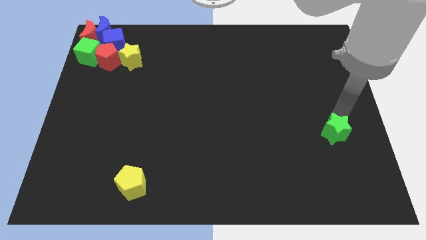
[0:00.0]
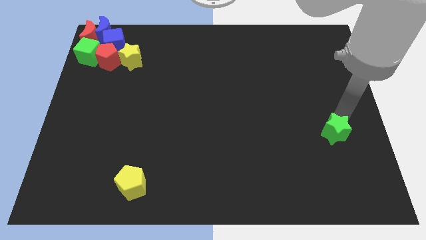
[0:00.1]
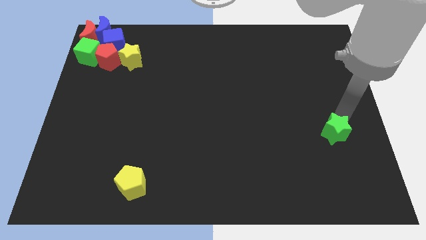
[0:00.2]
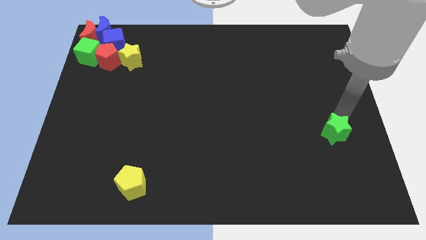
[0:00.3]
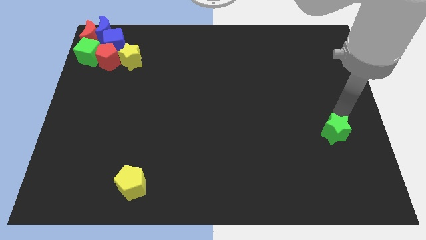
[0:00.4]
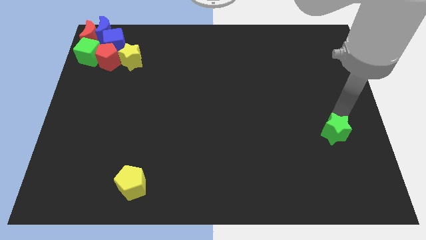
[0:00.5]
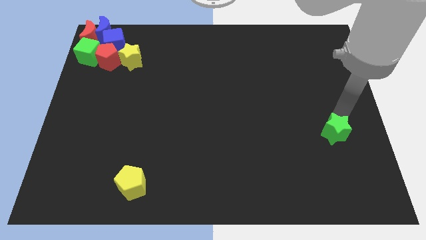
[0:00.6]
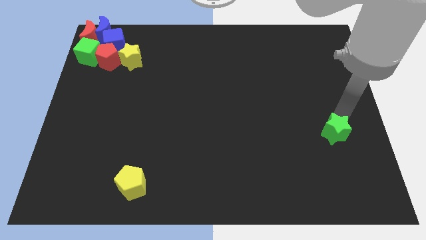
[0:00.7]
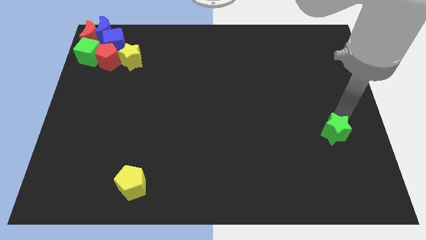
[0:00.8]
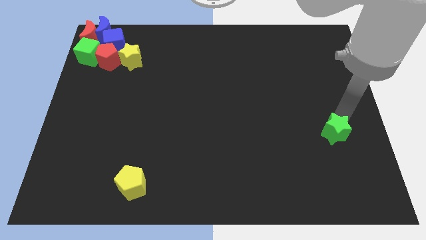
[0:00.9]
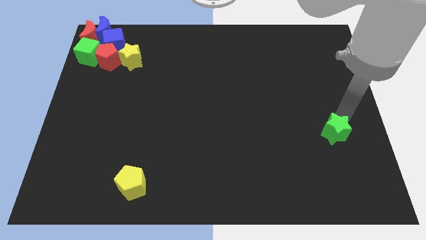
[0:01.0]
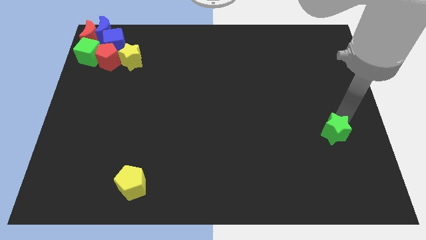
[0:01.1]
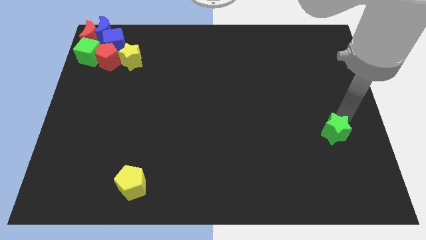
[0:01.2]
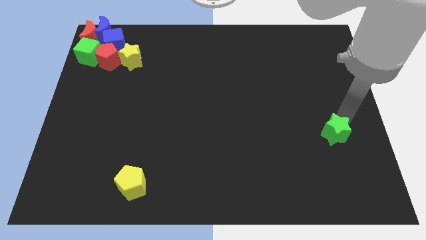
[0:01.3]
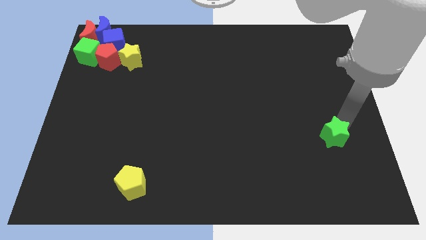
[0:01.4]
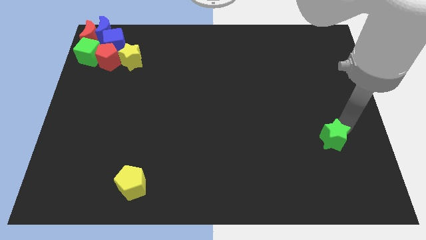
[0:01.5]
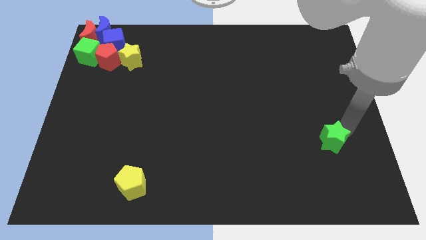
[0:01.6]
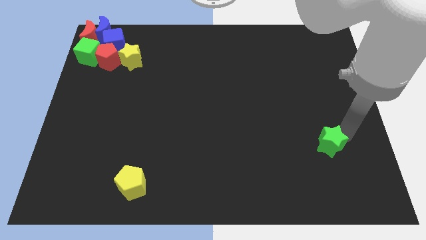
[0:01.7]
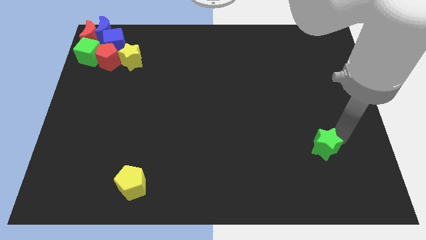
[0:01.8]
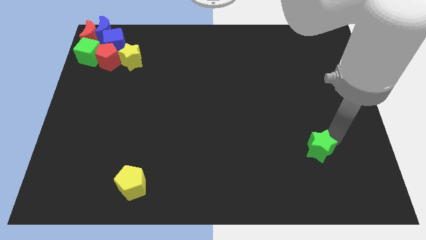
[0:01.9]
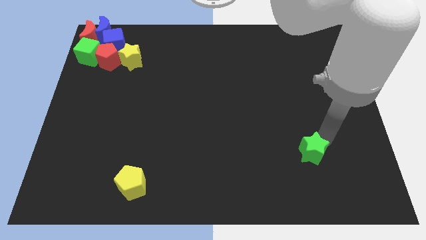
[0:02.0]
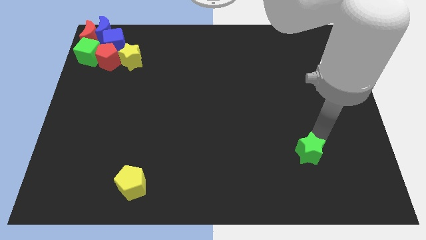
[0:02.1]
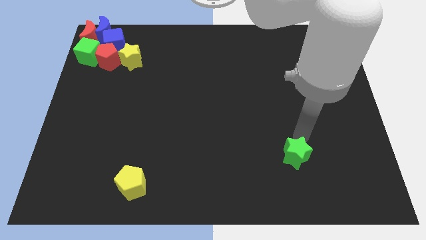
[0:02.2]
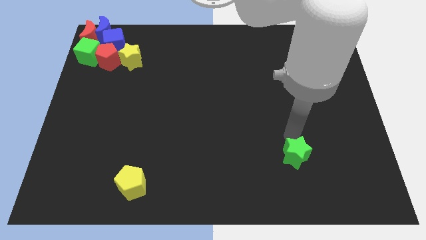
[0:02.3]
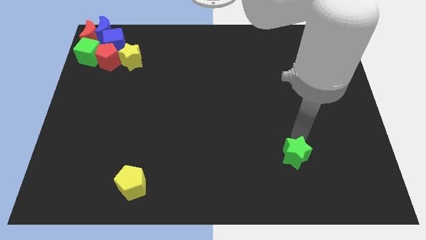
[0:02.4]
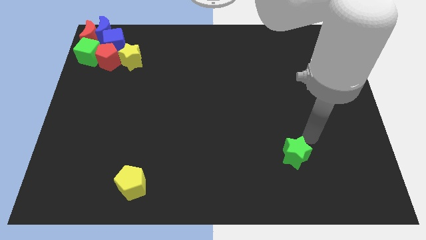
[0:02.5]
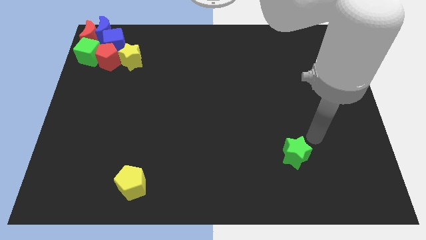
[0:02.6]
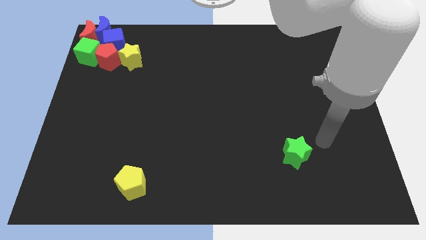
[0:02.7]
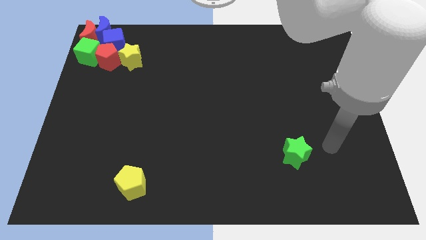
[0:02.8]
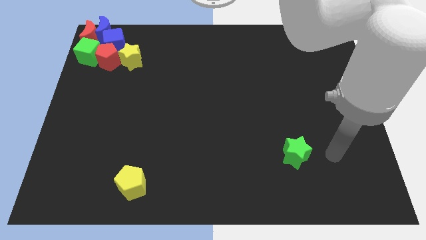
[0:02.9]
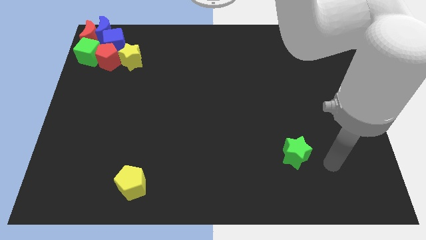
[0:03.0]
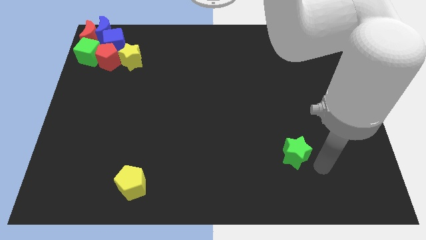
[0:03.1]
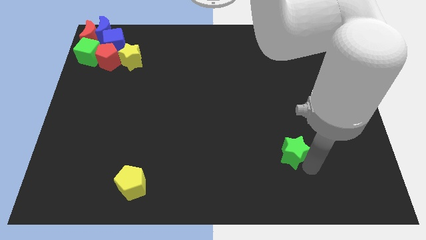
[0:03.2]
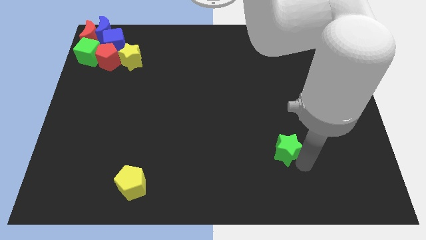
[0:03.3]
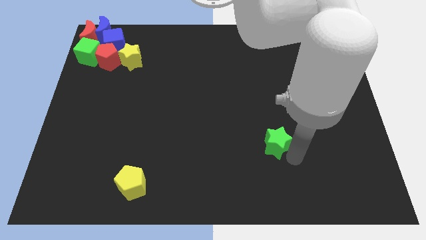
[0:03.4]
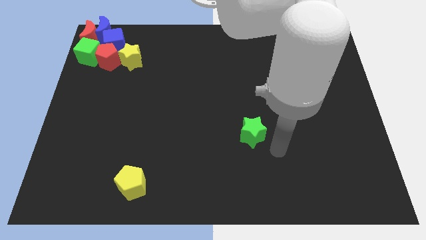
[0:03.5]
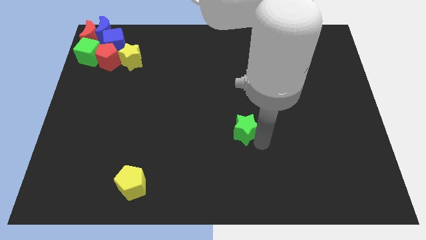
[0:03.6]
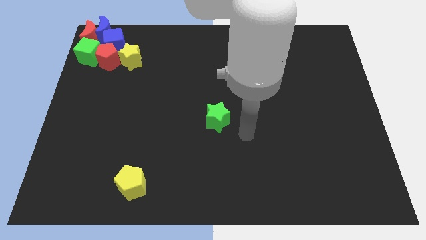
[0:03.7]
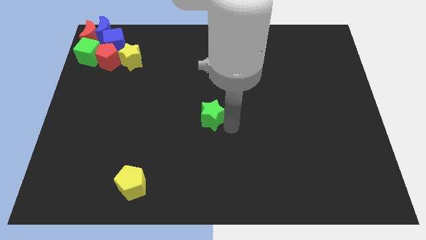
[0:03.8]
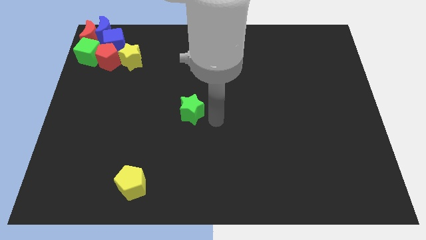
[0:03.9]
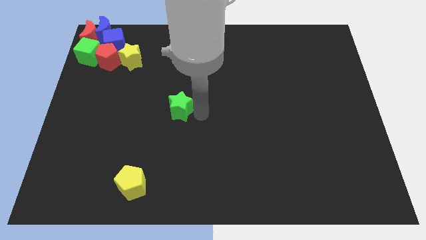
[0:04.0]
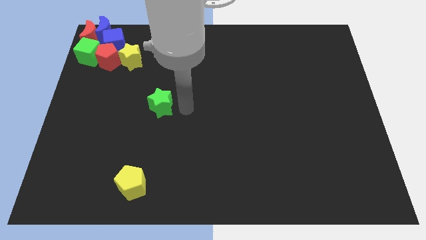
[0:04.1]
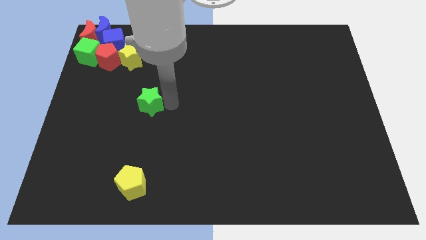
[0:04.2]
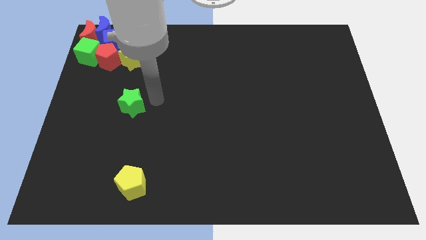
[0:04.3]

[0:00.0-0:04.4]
place the green star above the yellow pentagon

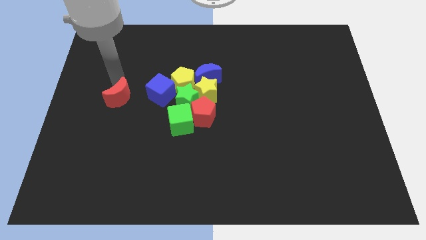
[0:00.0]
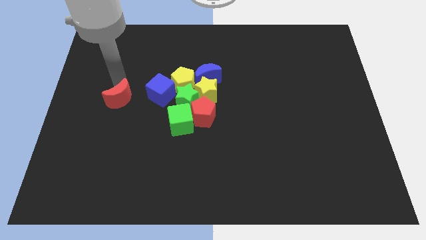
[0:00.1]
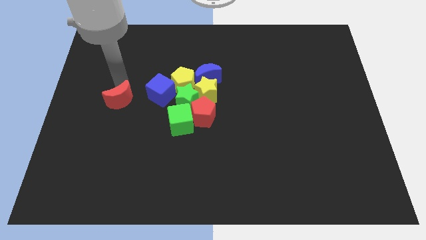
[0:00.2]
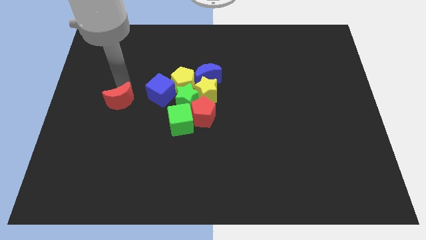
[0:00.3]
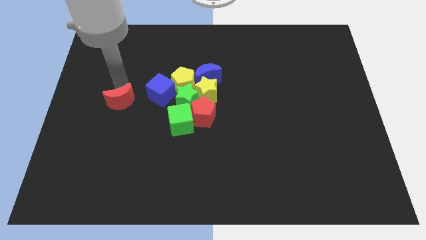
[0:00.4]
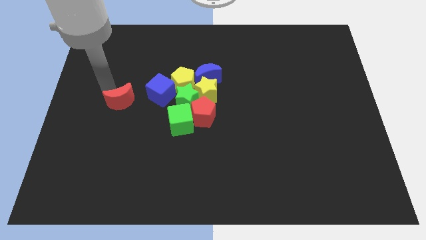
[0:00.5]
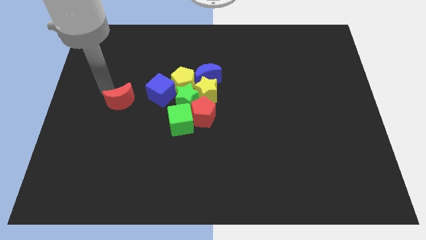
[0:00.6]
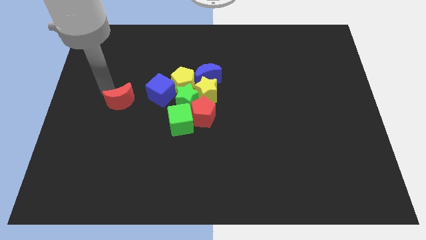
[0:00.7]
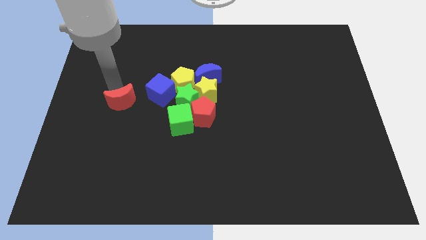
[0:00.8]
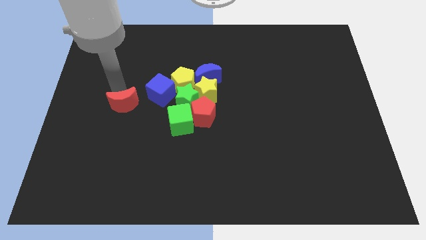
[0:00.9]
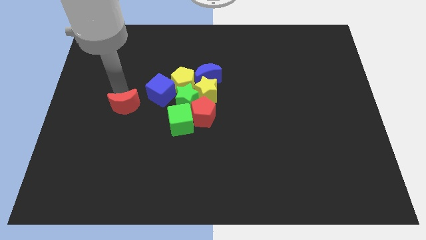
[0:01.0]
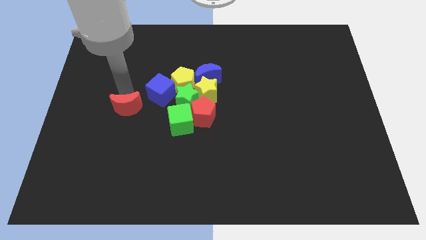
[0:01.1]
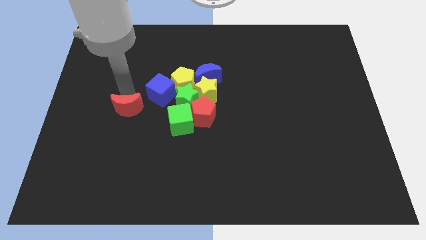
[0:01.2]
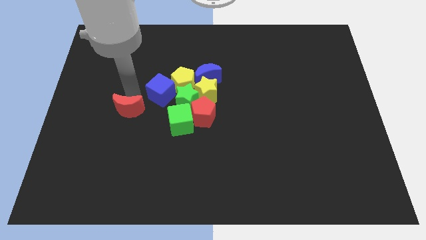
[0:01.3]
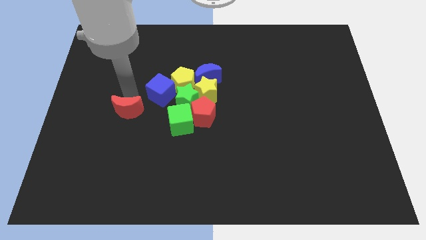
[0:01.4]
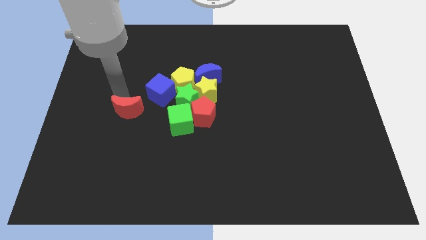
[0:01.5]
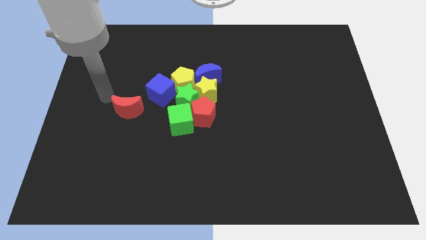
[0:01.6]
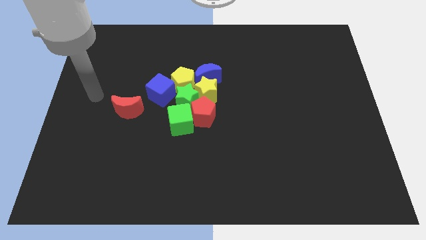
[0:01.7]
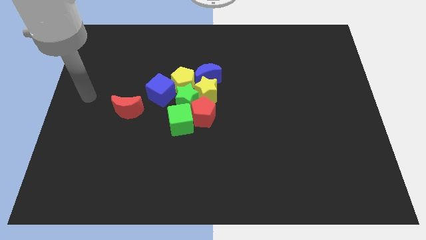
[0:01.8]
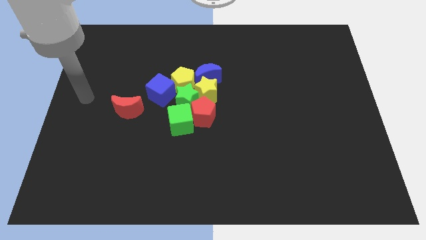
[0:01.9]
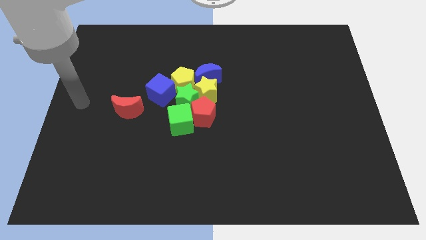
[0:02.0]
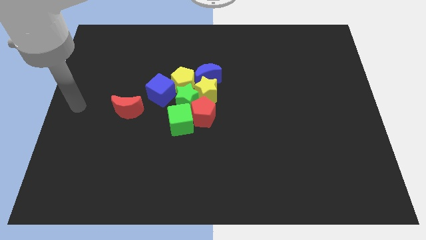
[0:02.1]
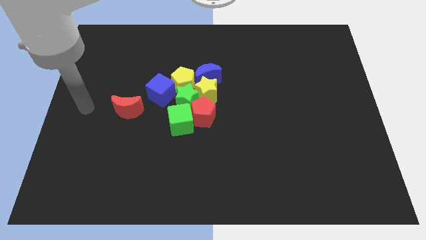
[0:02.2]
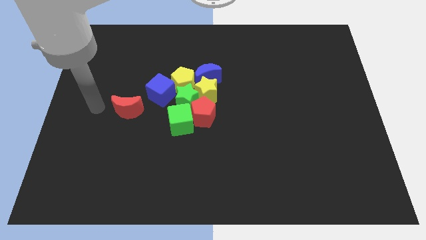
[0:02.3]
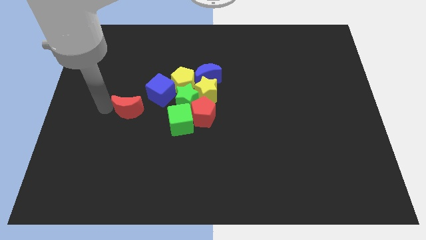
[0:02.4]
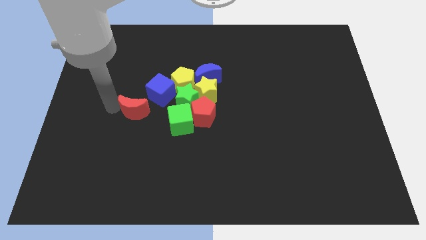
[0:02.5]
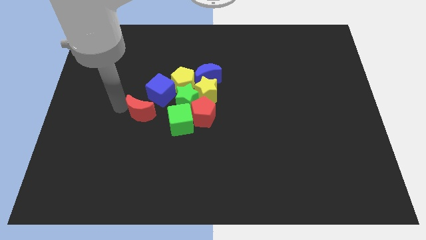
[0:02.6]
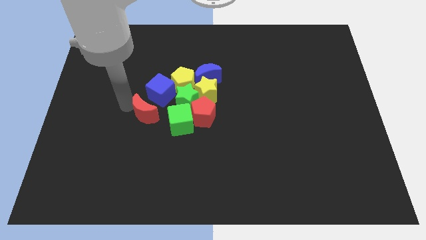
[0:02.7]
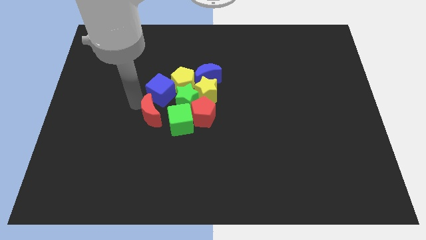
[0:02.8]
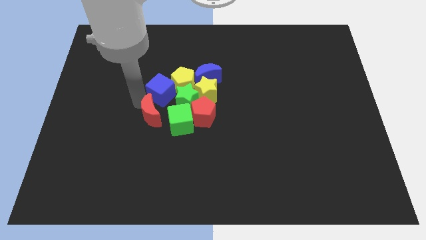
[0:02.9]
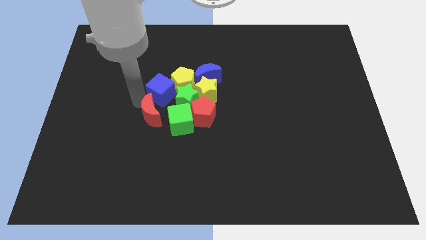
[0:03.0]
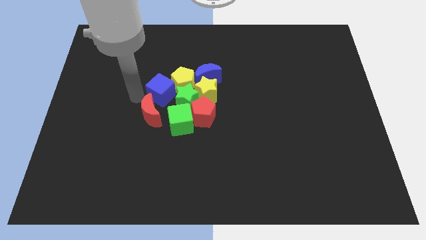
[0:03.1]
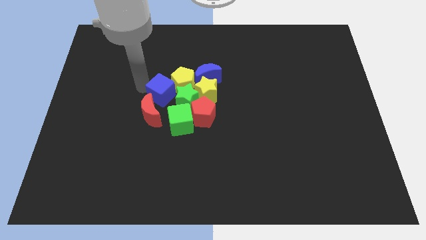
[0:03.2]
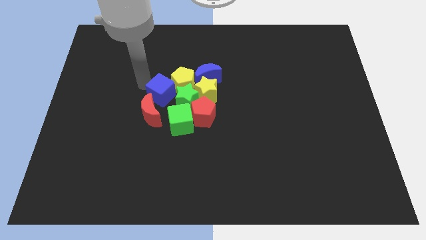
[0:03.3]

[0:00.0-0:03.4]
move red moon to the bottom left of blue cube

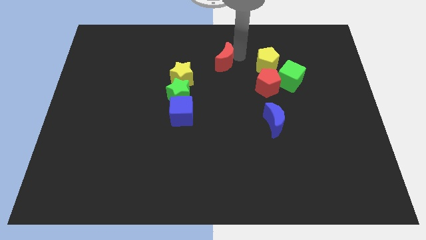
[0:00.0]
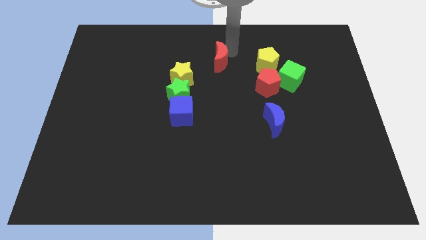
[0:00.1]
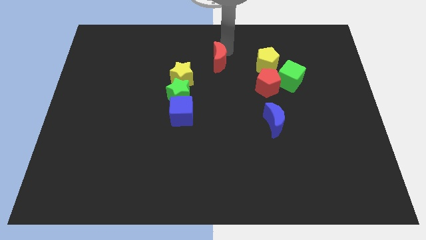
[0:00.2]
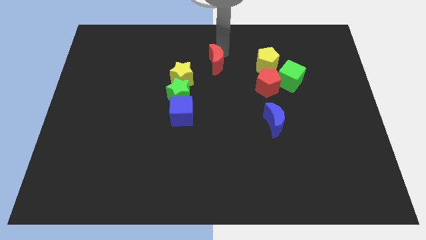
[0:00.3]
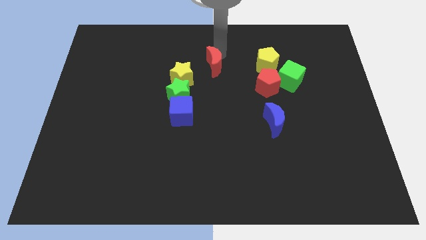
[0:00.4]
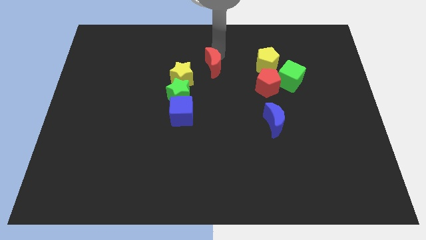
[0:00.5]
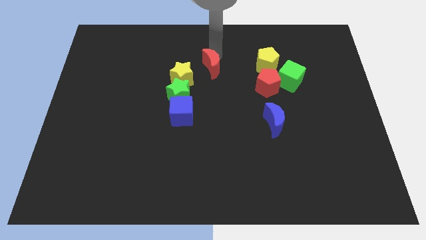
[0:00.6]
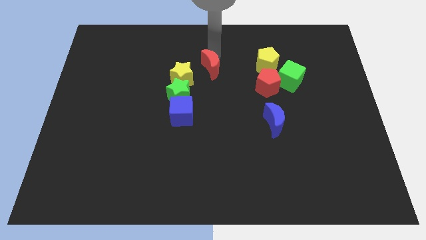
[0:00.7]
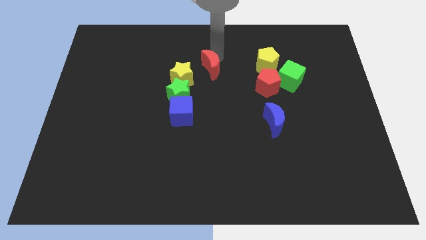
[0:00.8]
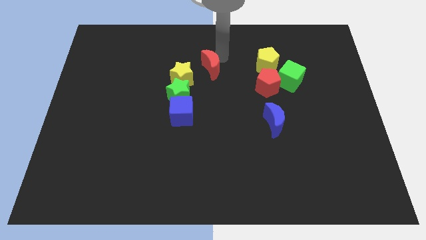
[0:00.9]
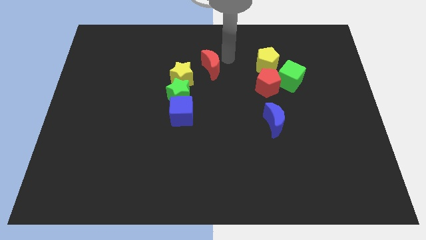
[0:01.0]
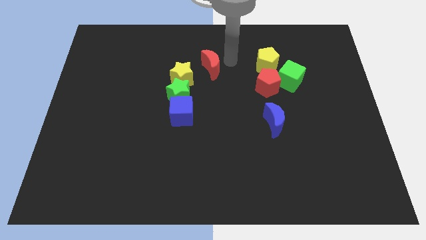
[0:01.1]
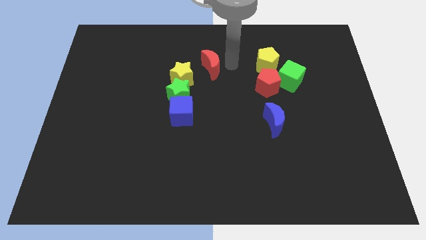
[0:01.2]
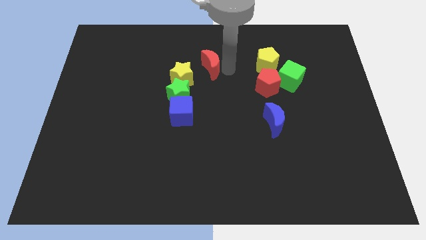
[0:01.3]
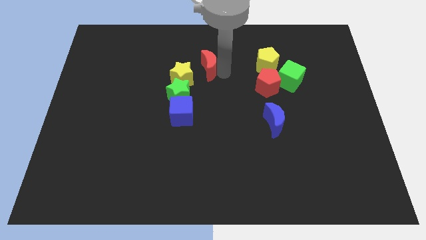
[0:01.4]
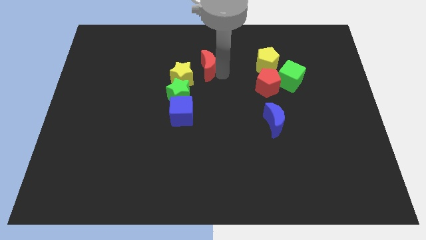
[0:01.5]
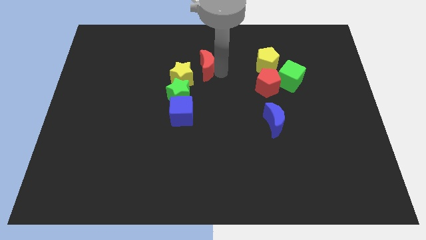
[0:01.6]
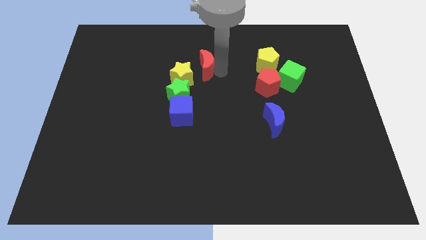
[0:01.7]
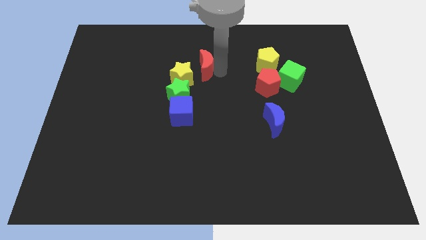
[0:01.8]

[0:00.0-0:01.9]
move the red crescent to the left of the board
